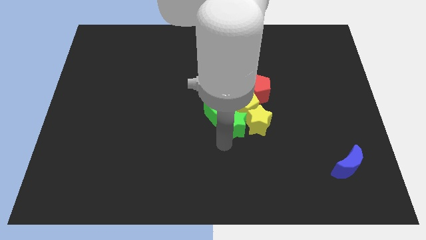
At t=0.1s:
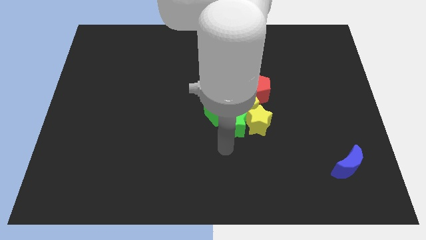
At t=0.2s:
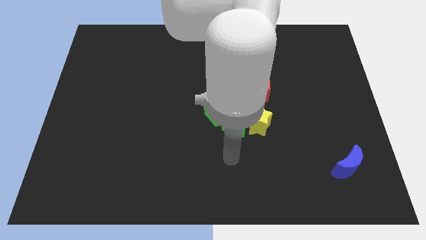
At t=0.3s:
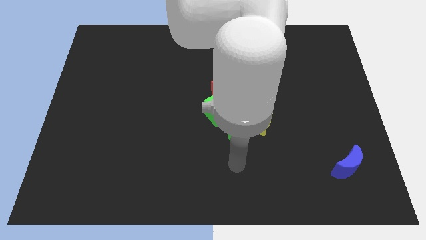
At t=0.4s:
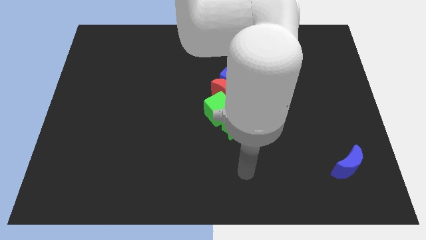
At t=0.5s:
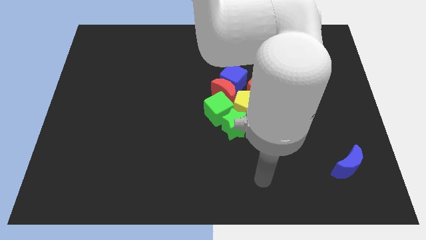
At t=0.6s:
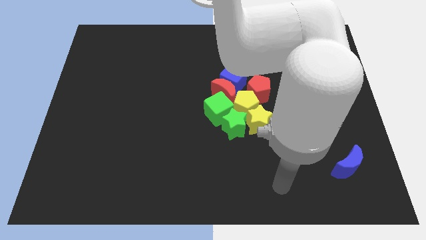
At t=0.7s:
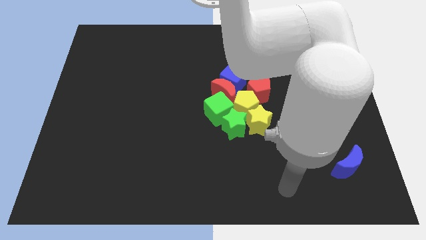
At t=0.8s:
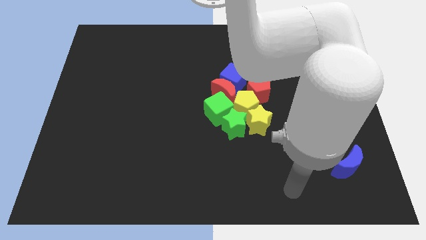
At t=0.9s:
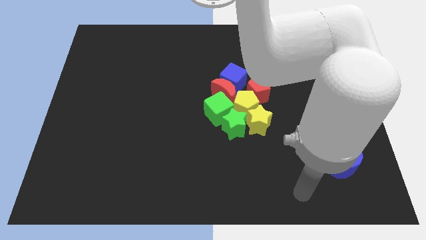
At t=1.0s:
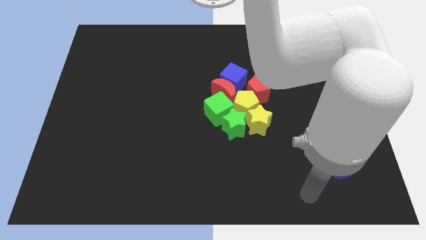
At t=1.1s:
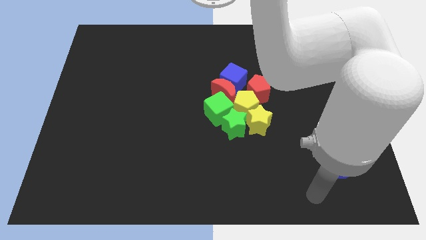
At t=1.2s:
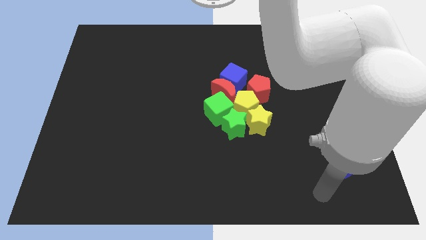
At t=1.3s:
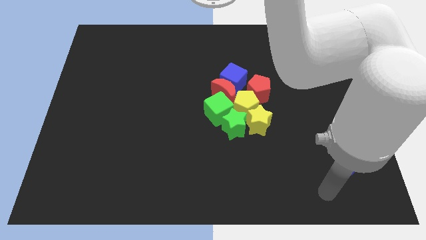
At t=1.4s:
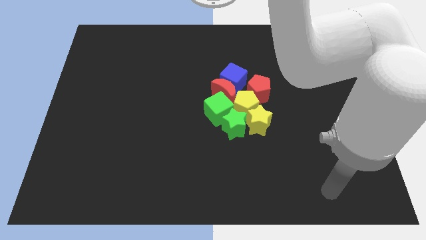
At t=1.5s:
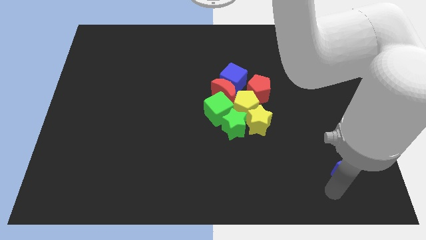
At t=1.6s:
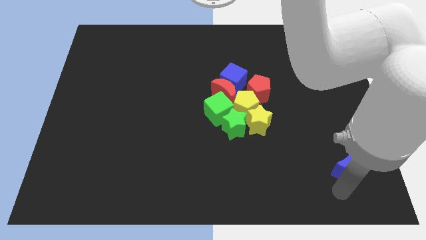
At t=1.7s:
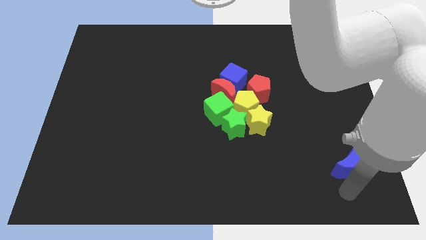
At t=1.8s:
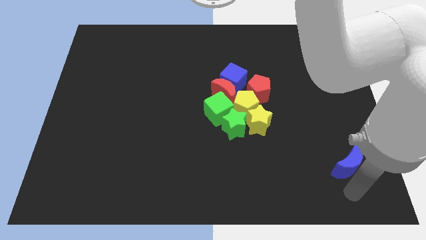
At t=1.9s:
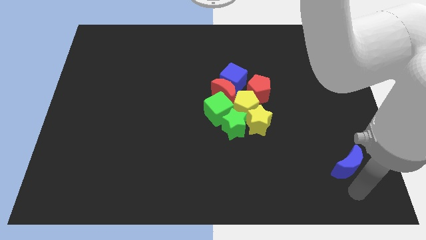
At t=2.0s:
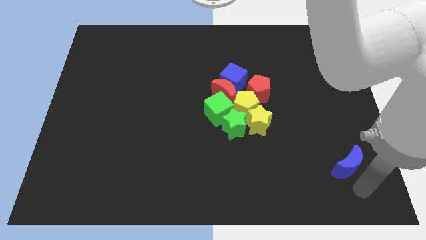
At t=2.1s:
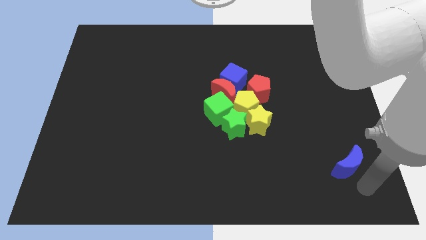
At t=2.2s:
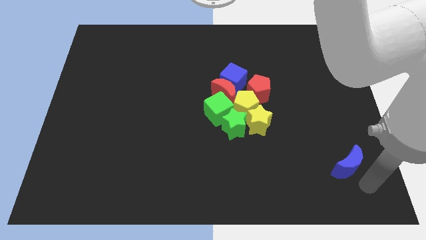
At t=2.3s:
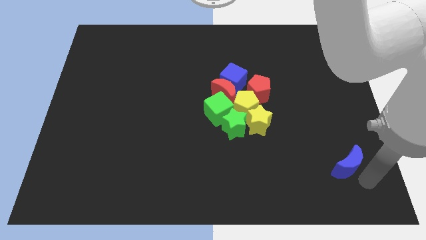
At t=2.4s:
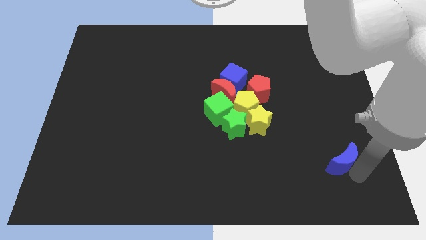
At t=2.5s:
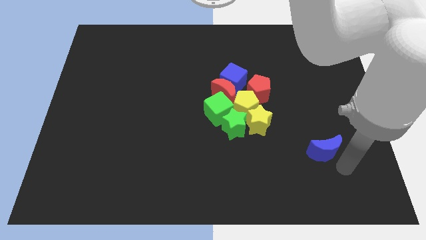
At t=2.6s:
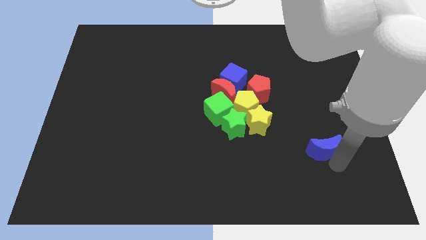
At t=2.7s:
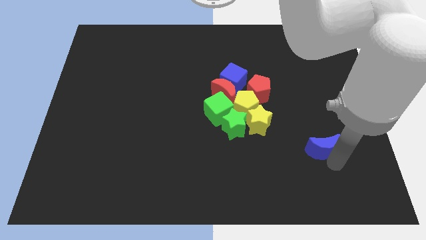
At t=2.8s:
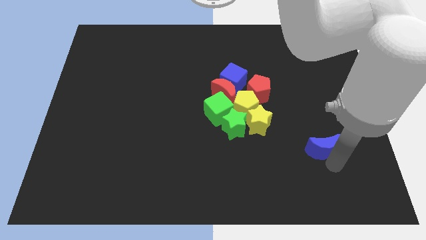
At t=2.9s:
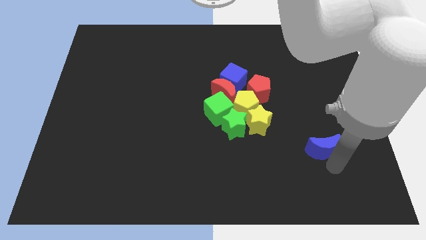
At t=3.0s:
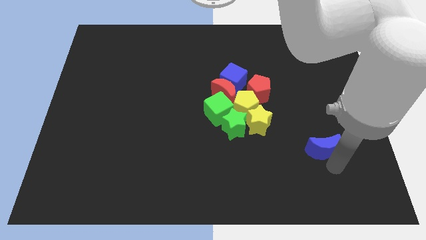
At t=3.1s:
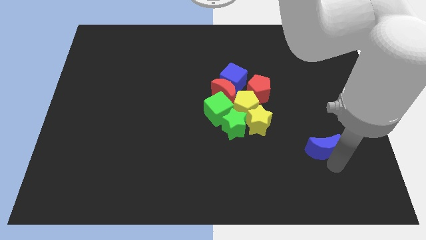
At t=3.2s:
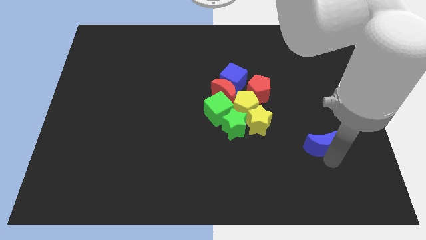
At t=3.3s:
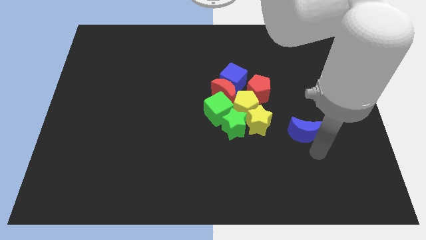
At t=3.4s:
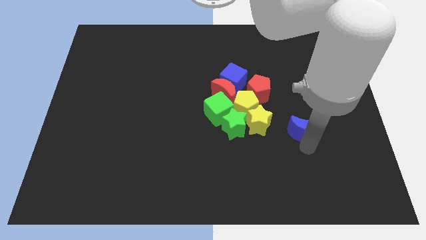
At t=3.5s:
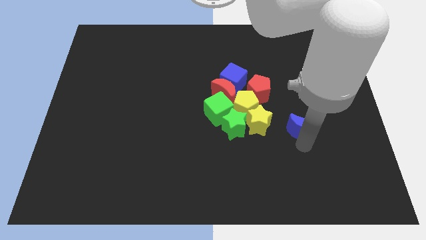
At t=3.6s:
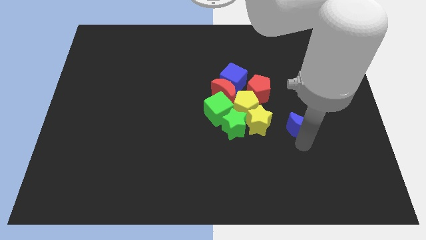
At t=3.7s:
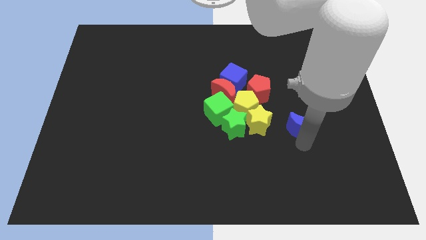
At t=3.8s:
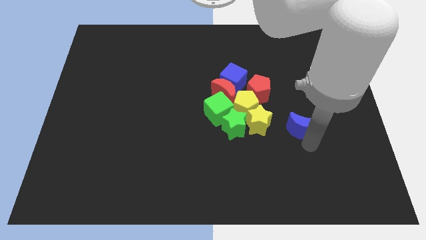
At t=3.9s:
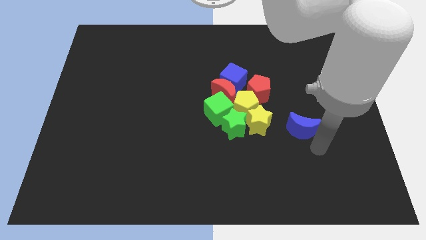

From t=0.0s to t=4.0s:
move the blue crescent to the right of the yellow star

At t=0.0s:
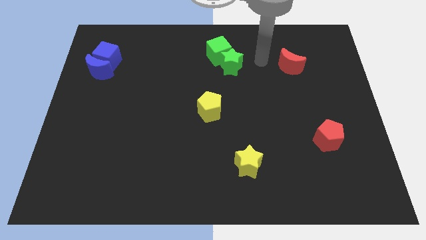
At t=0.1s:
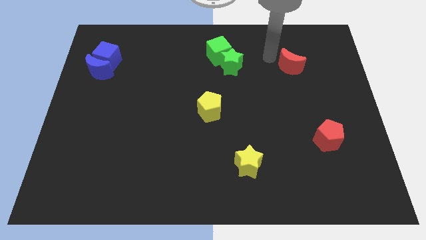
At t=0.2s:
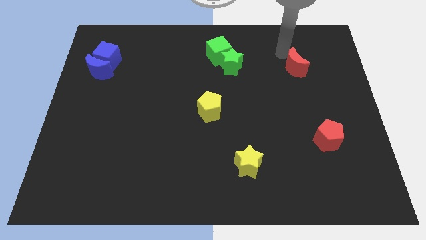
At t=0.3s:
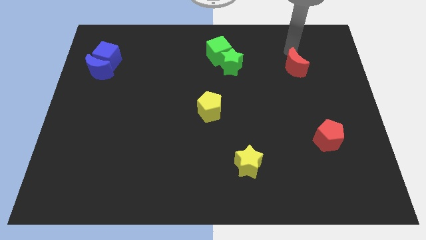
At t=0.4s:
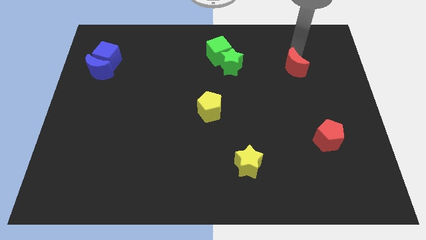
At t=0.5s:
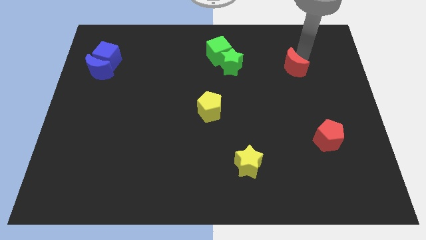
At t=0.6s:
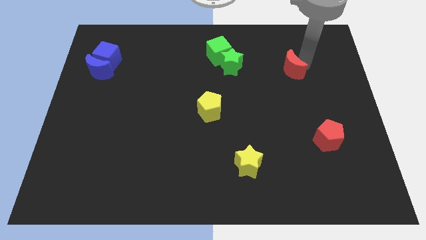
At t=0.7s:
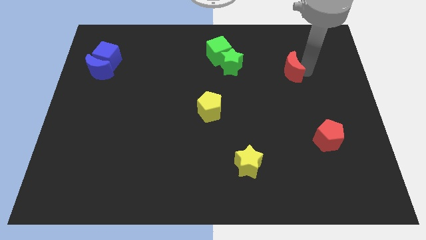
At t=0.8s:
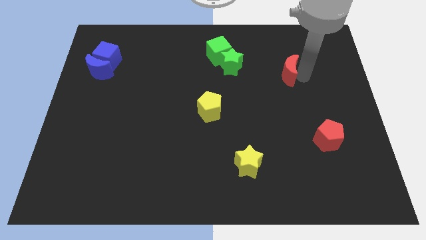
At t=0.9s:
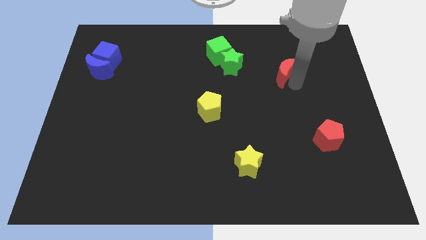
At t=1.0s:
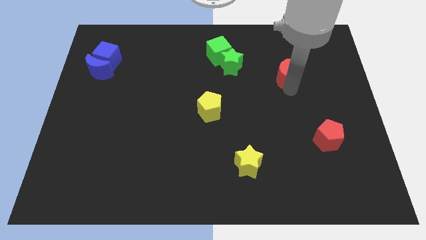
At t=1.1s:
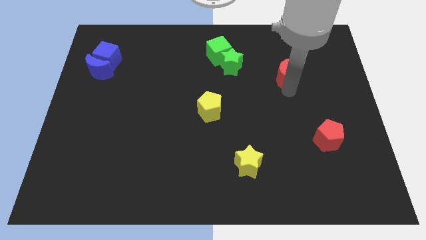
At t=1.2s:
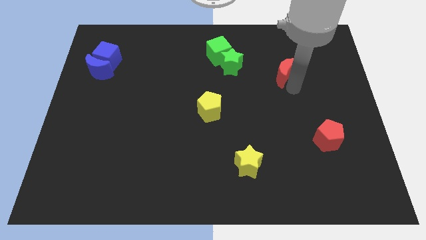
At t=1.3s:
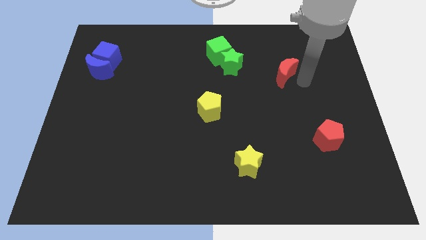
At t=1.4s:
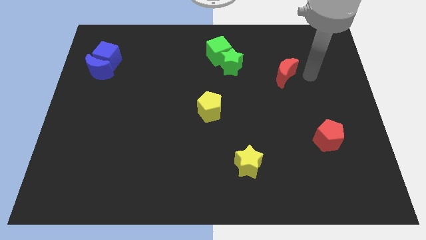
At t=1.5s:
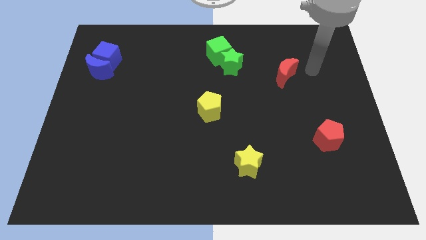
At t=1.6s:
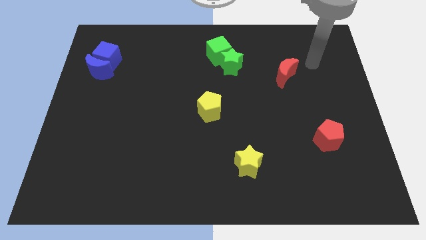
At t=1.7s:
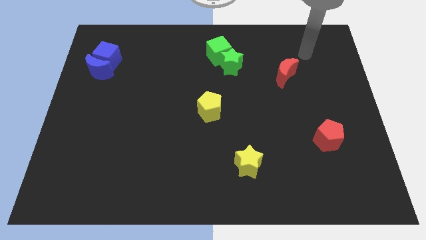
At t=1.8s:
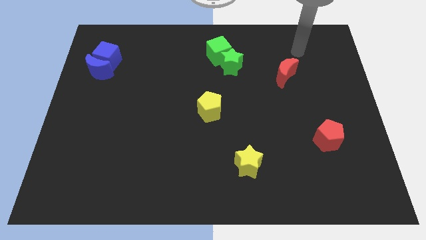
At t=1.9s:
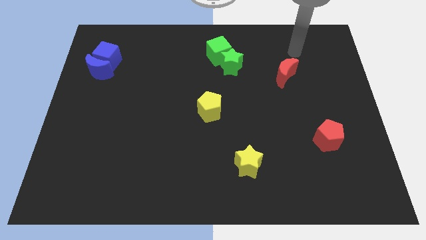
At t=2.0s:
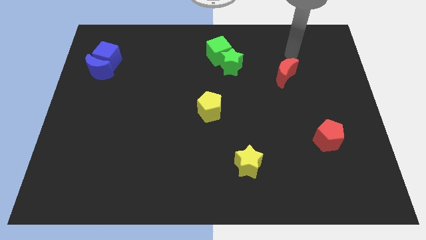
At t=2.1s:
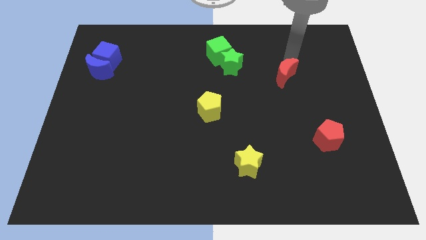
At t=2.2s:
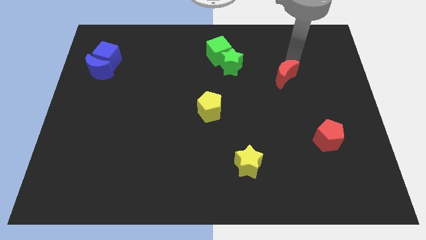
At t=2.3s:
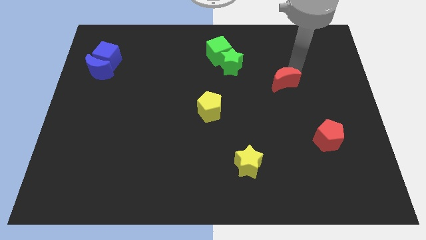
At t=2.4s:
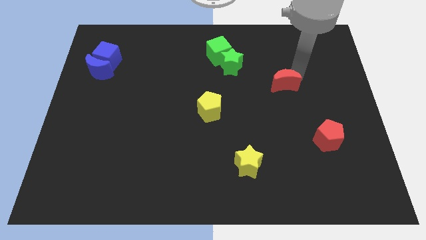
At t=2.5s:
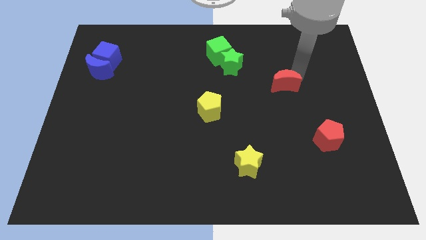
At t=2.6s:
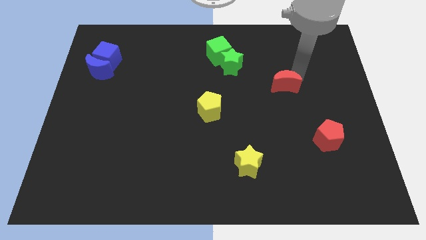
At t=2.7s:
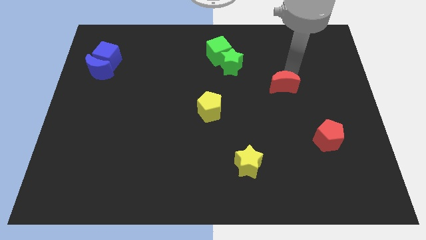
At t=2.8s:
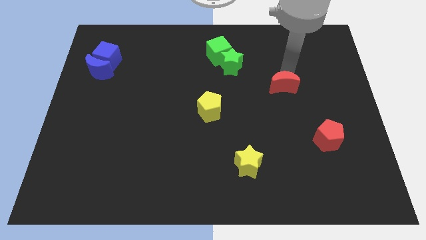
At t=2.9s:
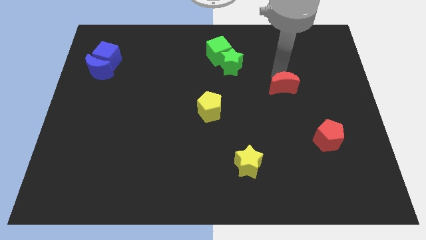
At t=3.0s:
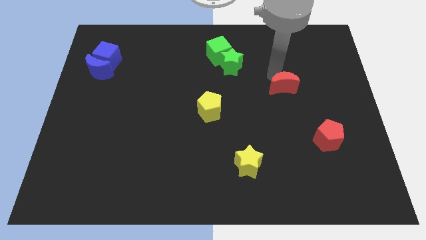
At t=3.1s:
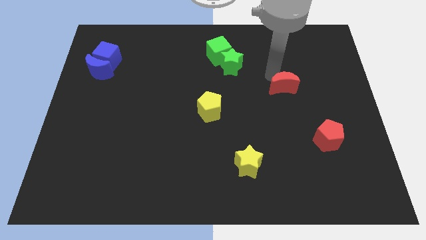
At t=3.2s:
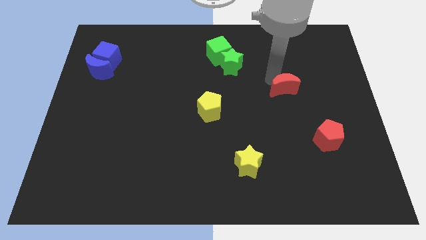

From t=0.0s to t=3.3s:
push the red moon diagonal to the right of the yellow pentagon

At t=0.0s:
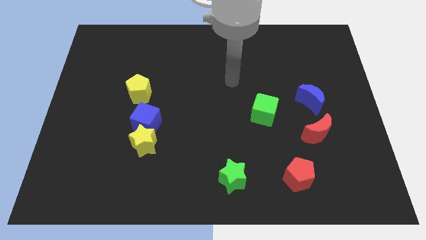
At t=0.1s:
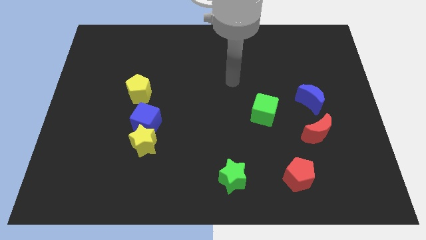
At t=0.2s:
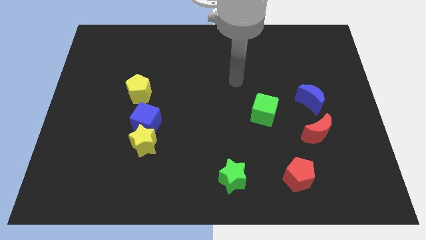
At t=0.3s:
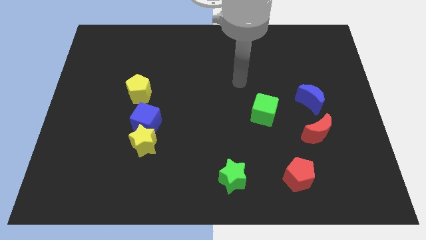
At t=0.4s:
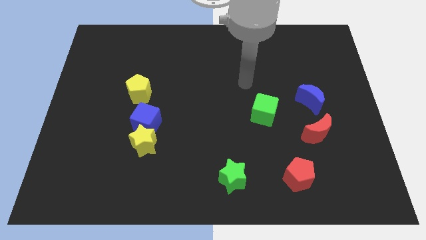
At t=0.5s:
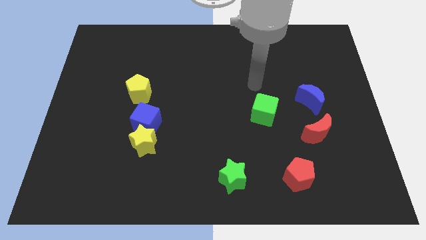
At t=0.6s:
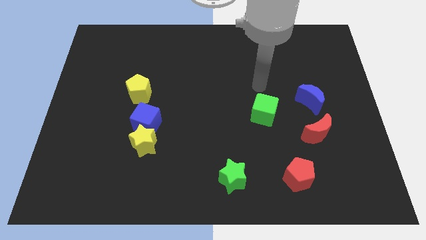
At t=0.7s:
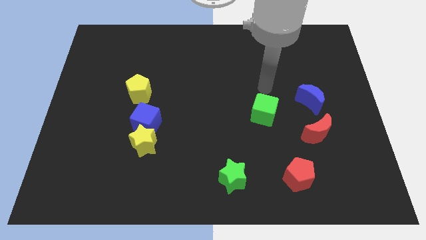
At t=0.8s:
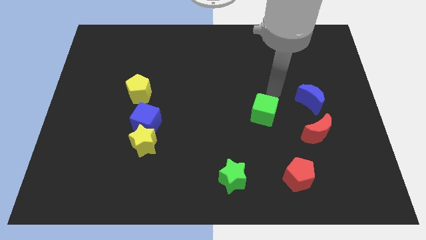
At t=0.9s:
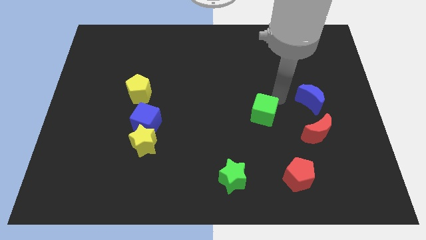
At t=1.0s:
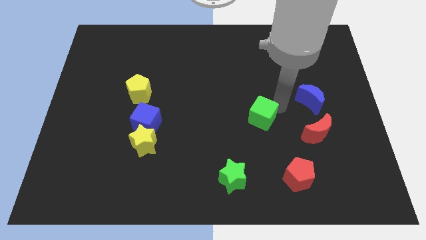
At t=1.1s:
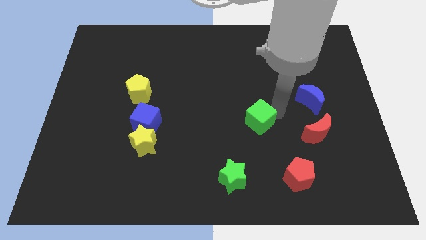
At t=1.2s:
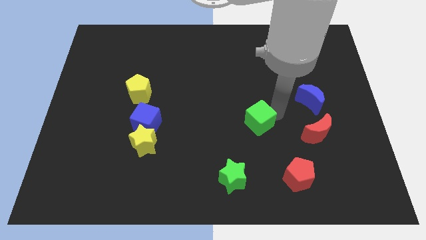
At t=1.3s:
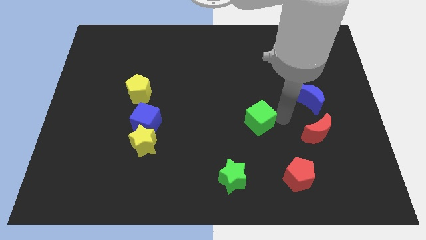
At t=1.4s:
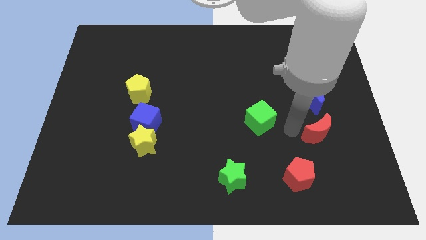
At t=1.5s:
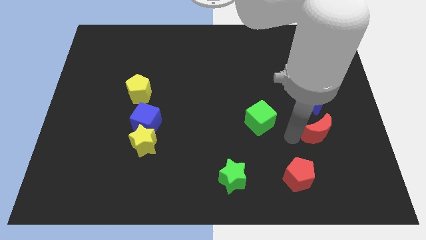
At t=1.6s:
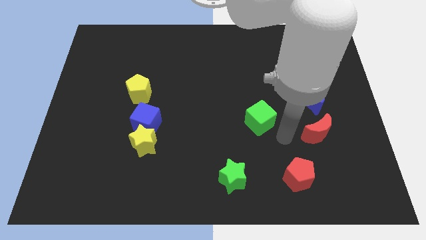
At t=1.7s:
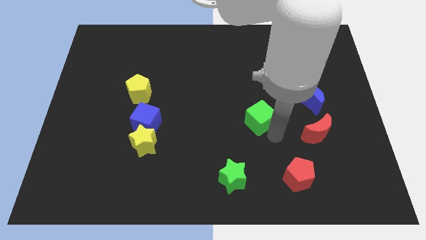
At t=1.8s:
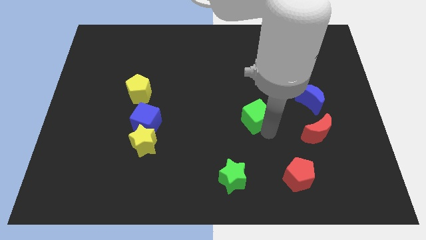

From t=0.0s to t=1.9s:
put your hand to the bottom right of the green cube
